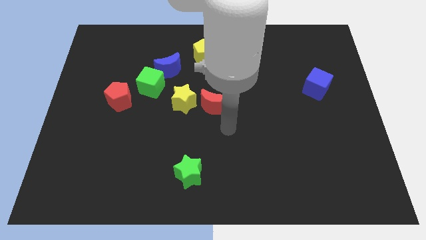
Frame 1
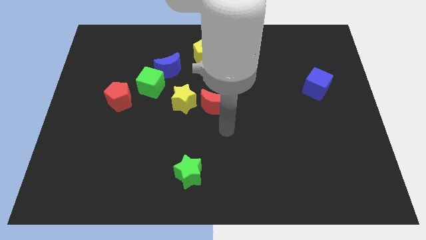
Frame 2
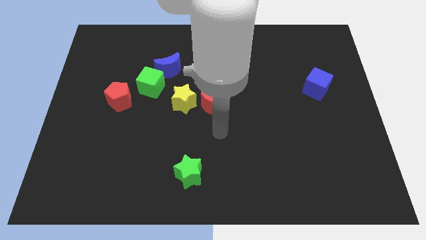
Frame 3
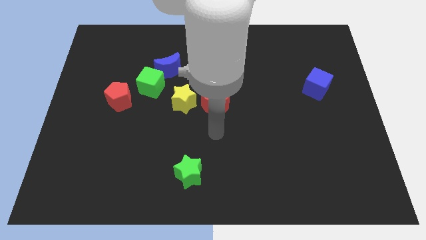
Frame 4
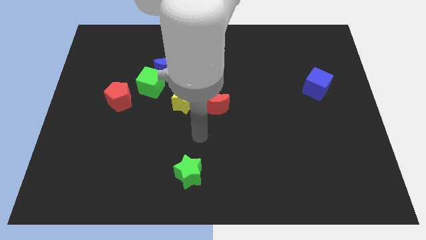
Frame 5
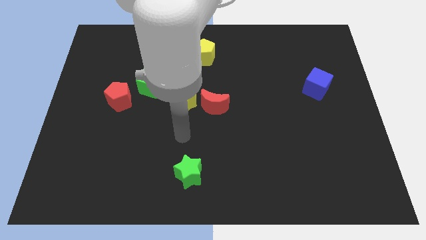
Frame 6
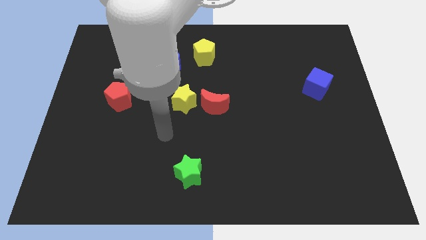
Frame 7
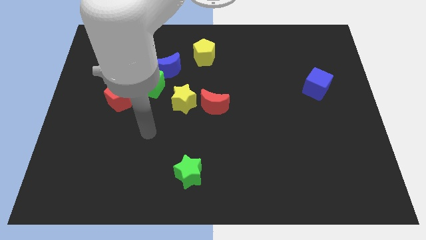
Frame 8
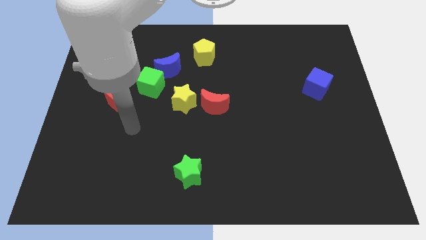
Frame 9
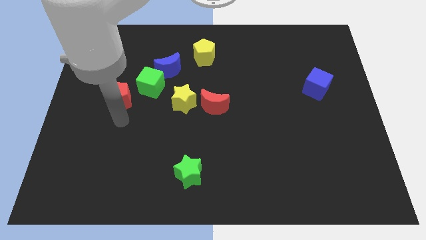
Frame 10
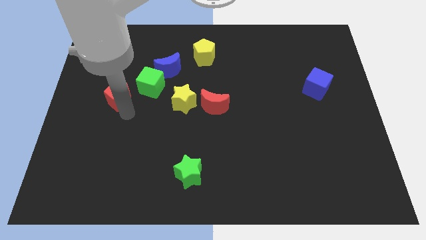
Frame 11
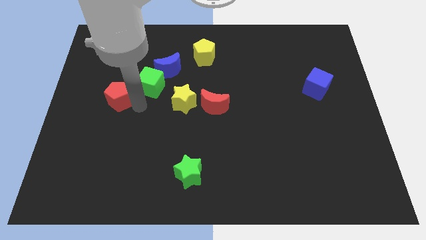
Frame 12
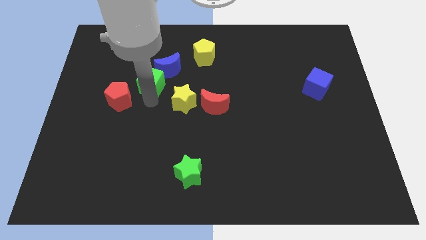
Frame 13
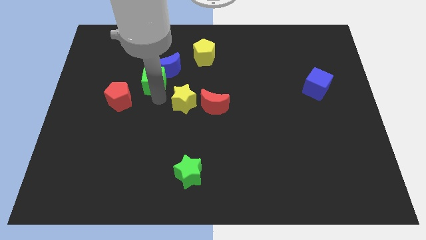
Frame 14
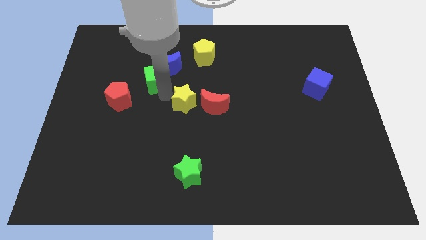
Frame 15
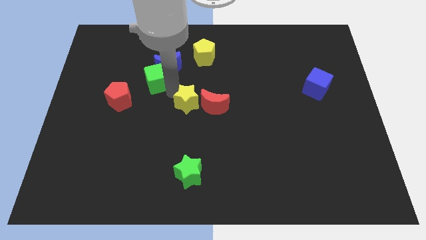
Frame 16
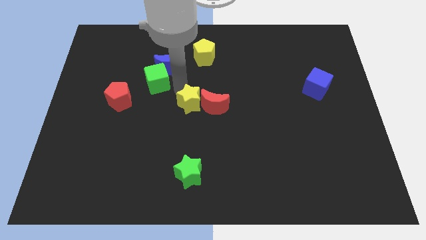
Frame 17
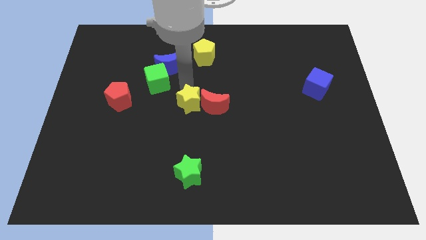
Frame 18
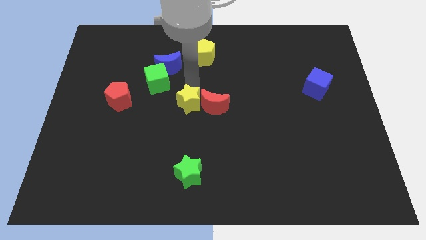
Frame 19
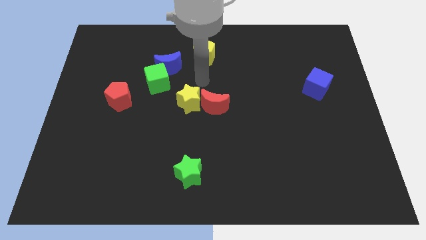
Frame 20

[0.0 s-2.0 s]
push the yellow star and green cube

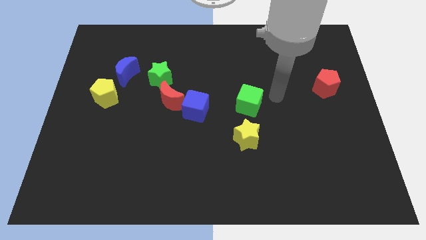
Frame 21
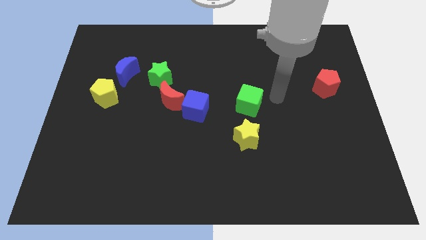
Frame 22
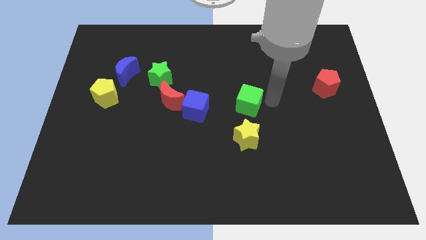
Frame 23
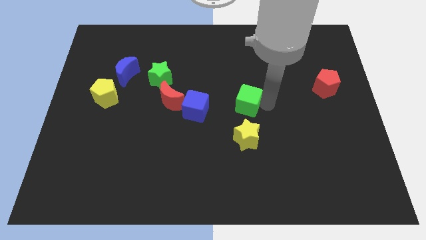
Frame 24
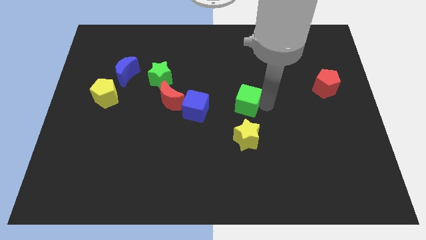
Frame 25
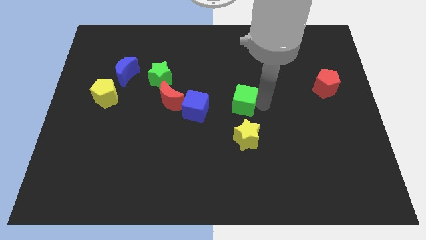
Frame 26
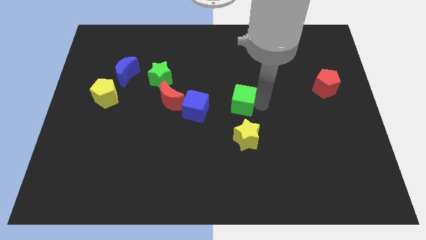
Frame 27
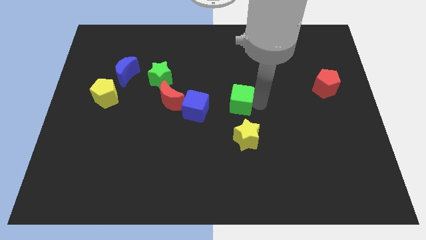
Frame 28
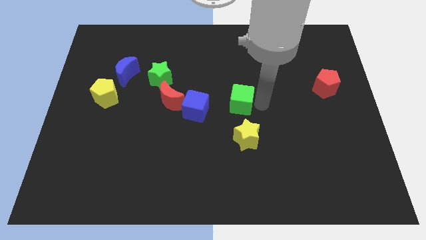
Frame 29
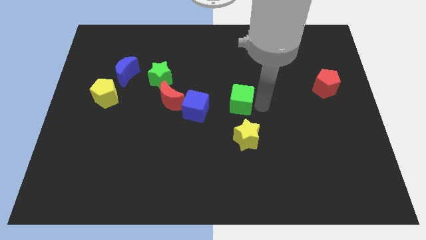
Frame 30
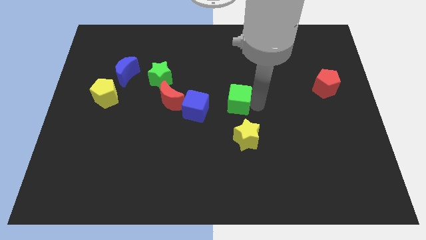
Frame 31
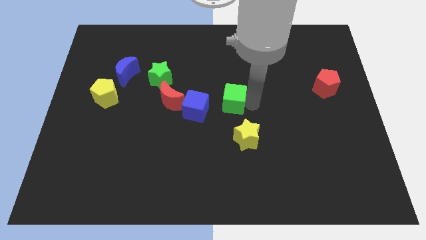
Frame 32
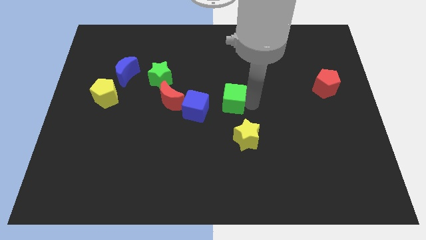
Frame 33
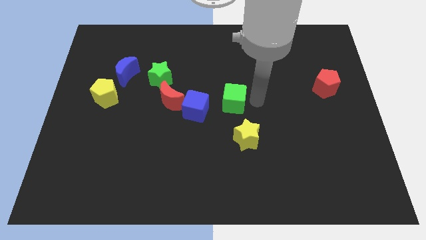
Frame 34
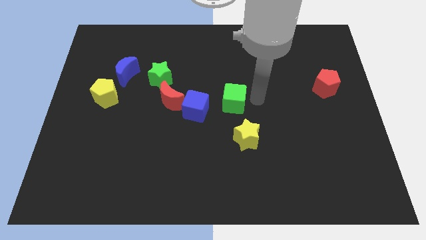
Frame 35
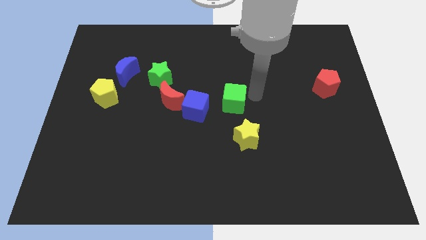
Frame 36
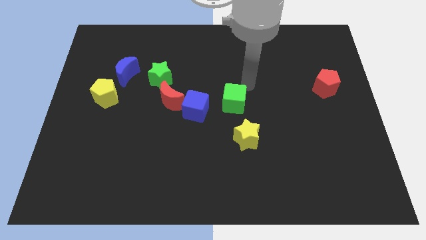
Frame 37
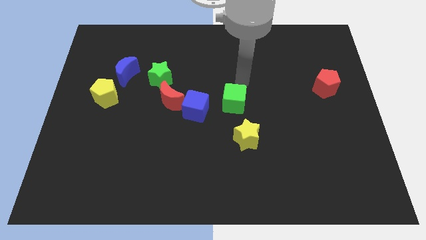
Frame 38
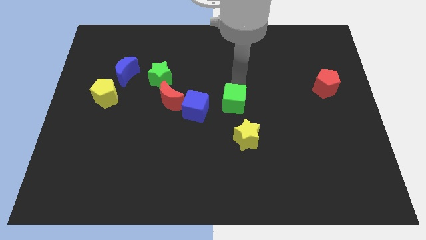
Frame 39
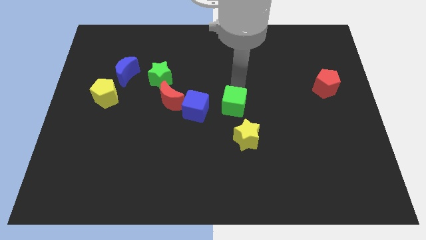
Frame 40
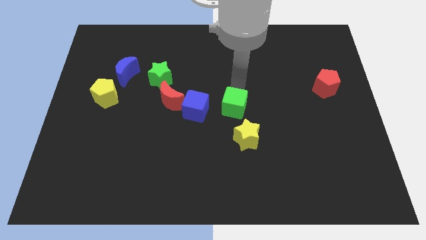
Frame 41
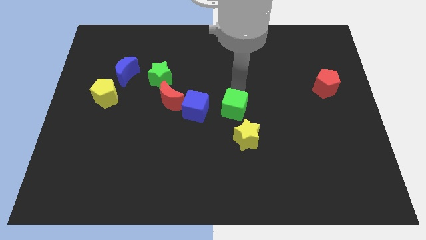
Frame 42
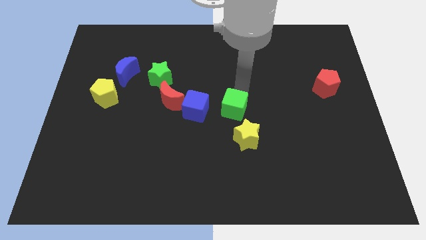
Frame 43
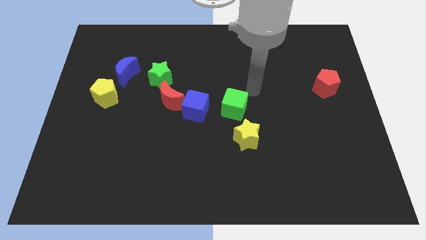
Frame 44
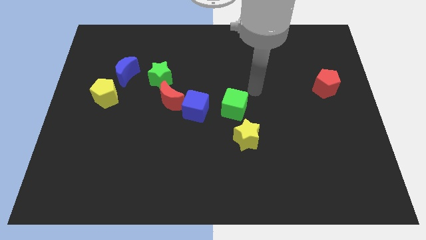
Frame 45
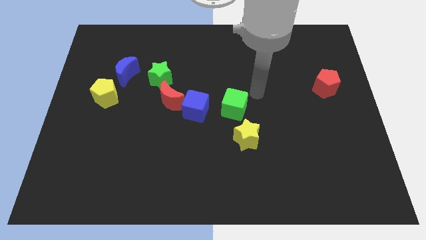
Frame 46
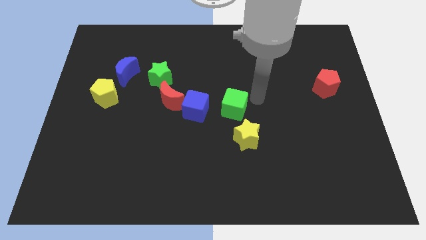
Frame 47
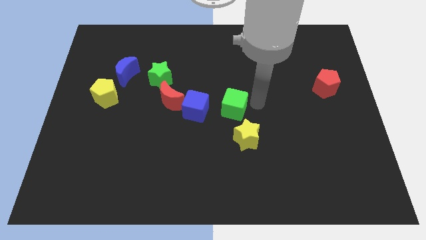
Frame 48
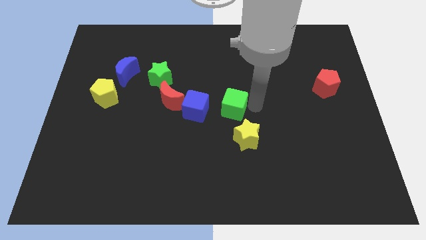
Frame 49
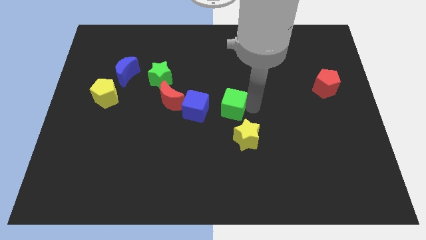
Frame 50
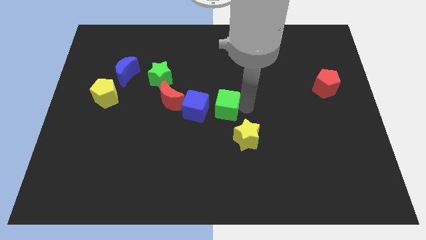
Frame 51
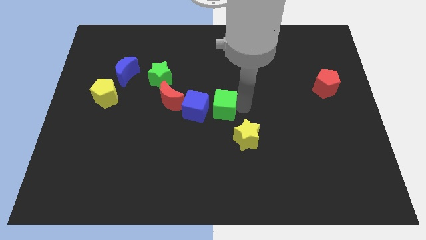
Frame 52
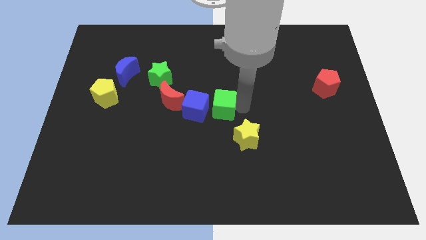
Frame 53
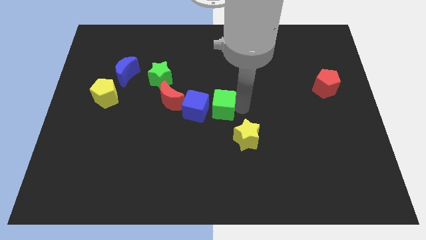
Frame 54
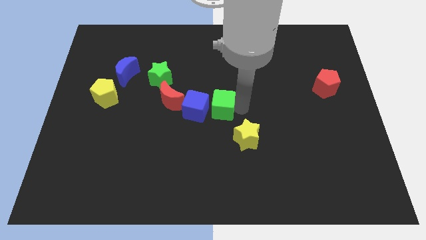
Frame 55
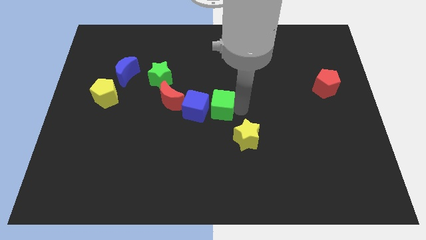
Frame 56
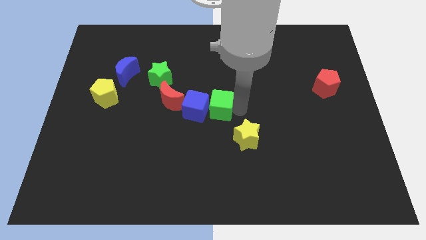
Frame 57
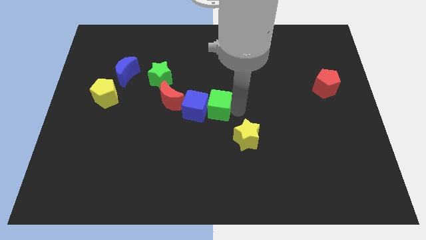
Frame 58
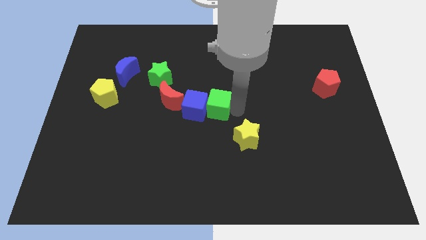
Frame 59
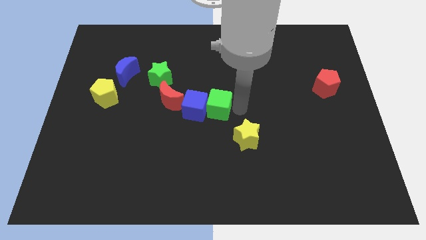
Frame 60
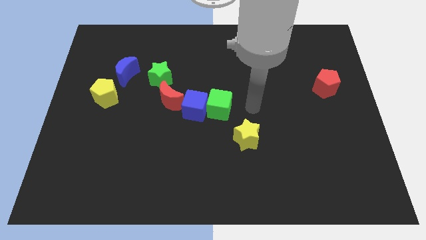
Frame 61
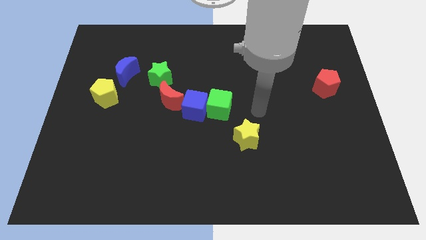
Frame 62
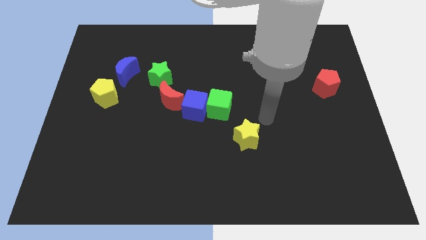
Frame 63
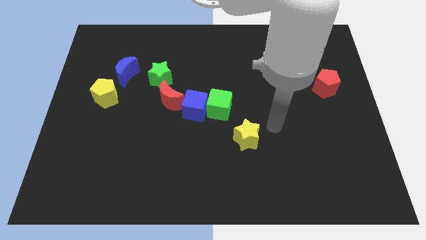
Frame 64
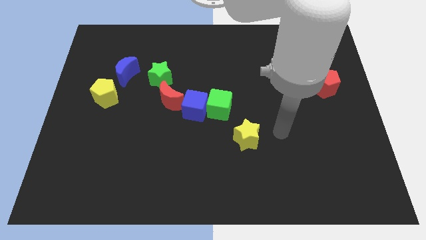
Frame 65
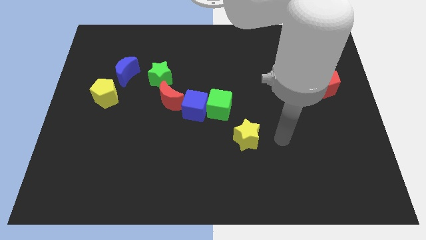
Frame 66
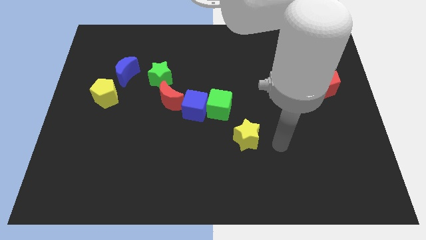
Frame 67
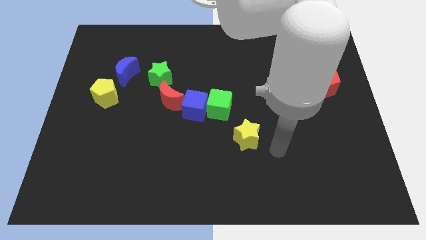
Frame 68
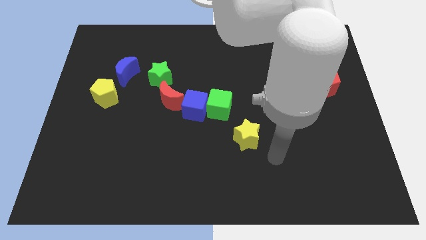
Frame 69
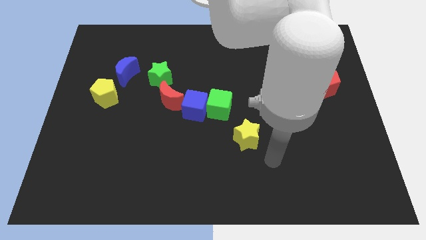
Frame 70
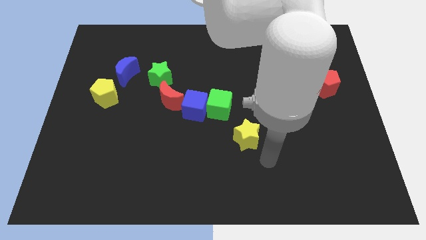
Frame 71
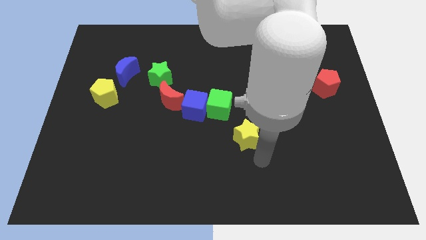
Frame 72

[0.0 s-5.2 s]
slightly push the green cube into the blue cube

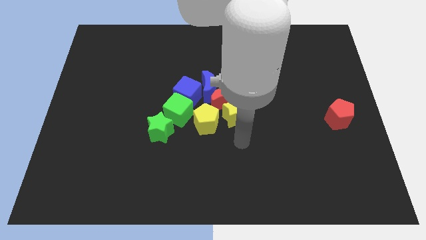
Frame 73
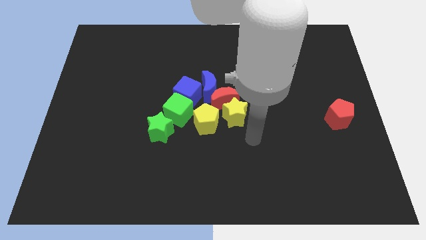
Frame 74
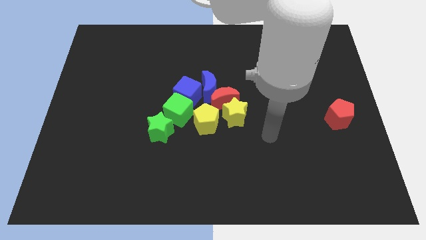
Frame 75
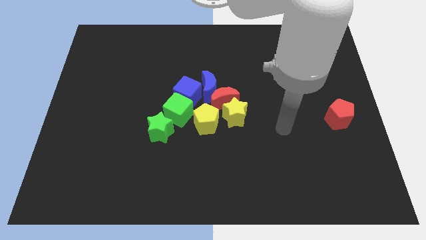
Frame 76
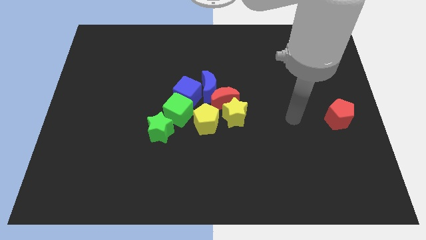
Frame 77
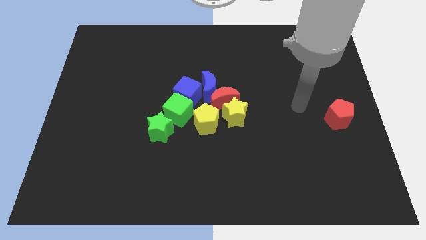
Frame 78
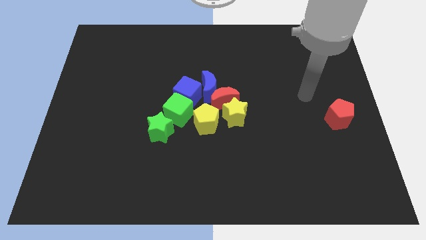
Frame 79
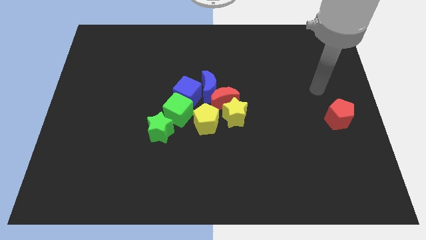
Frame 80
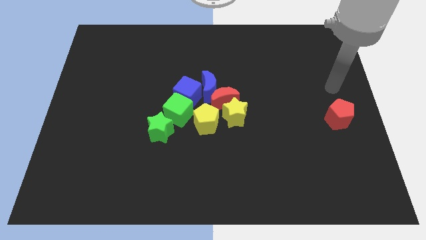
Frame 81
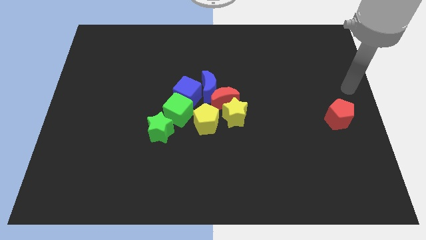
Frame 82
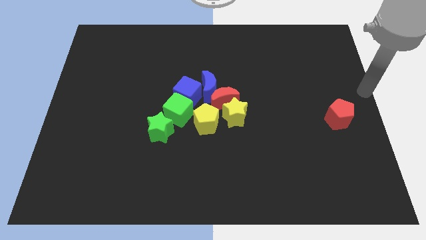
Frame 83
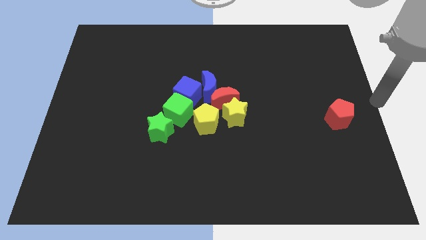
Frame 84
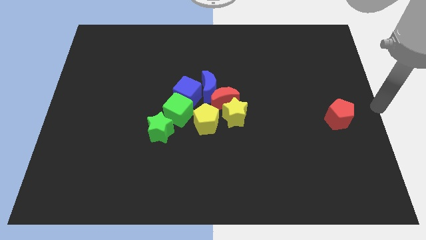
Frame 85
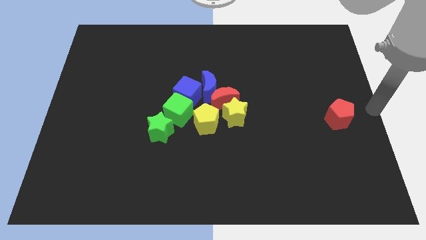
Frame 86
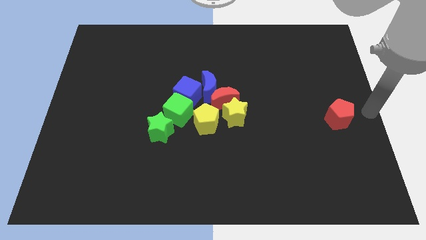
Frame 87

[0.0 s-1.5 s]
place your arm at the right of the red pentagon

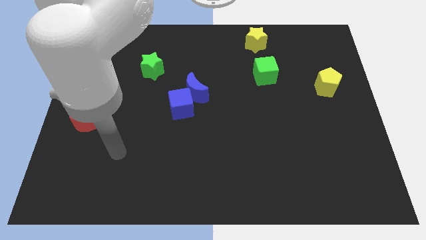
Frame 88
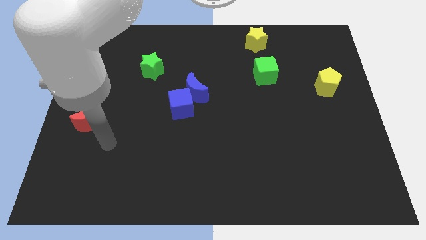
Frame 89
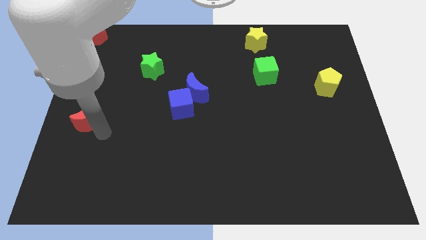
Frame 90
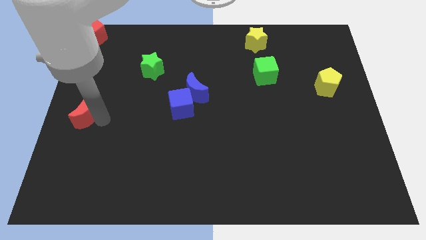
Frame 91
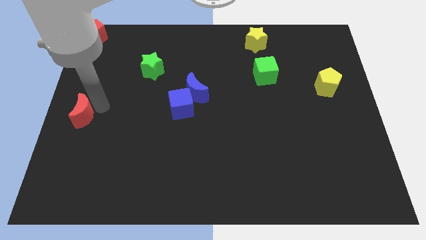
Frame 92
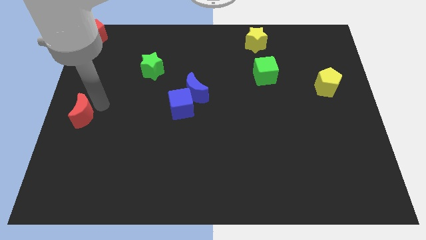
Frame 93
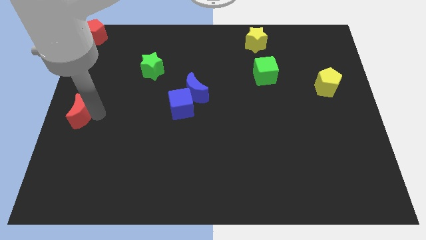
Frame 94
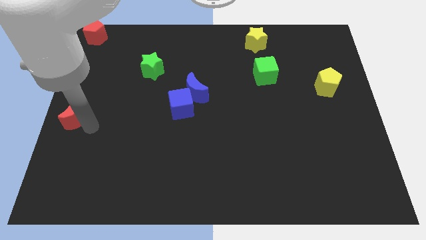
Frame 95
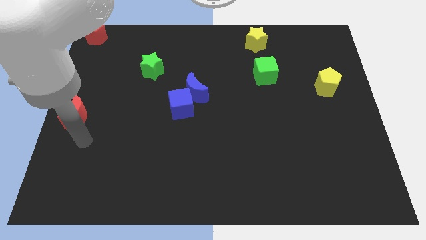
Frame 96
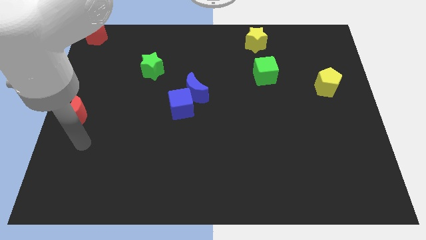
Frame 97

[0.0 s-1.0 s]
move red moon slightly toward middle of the board
